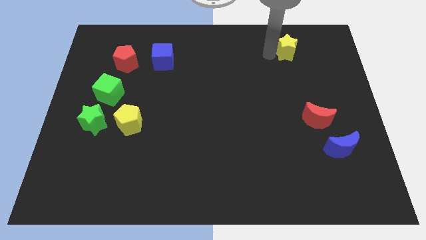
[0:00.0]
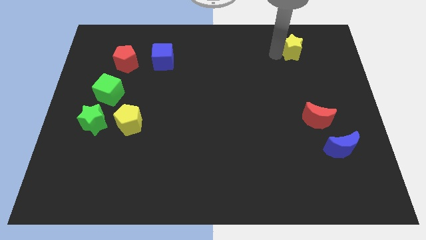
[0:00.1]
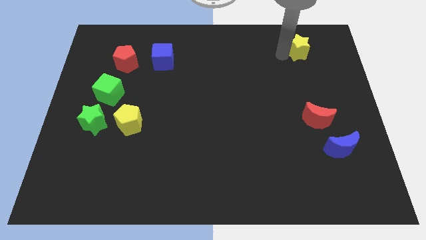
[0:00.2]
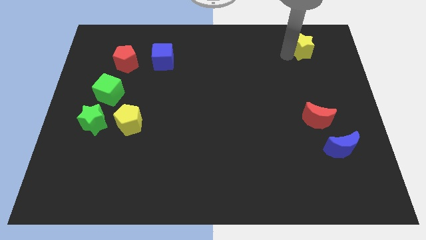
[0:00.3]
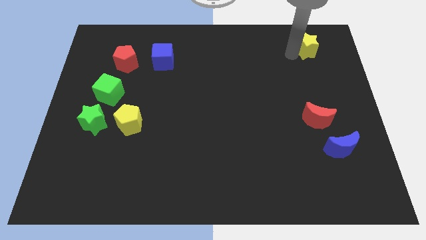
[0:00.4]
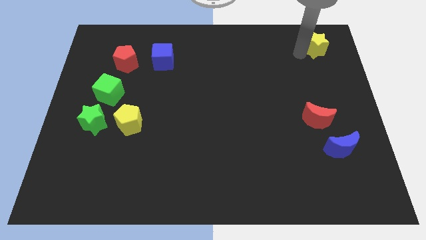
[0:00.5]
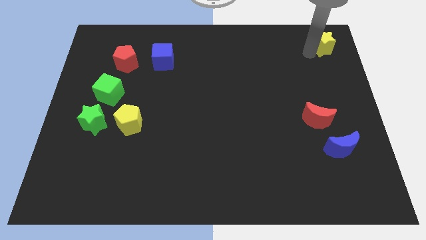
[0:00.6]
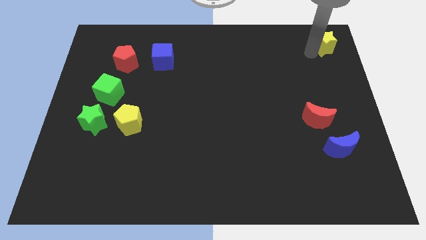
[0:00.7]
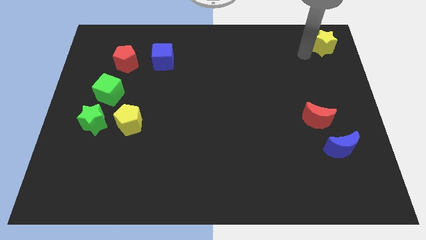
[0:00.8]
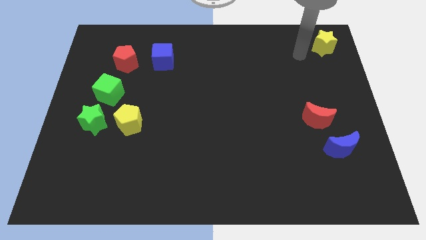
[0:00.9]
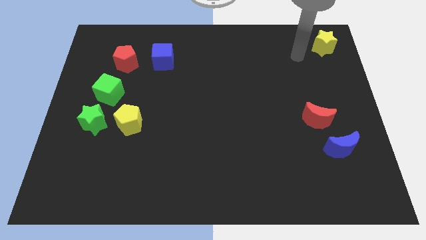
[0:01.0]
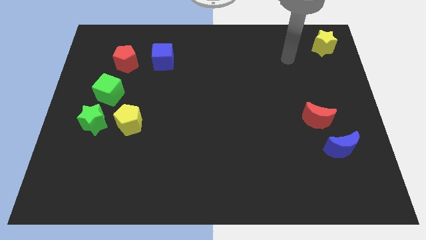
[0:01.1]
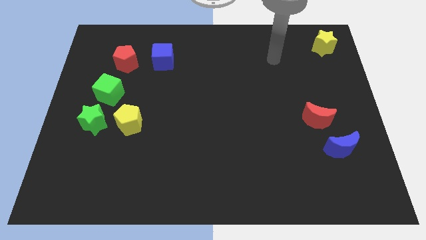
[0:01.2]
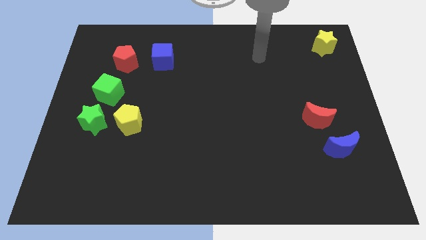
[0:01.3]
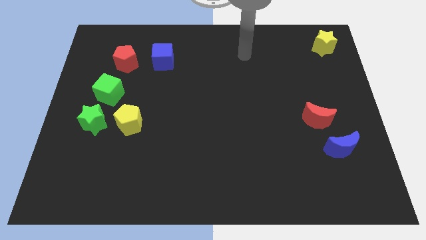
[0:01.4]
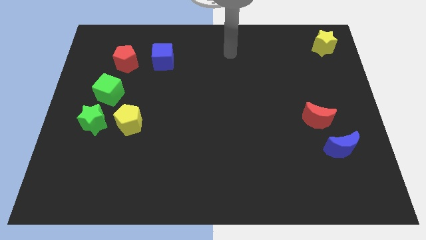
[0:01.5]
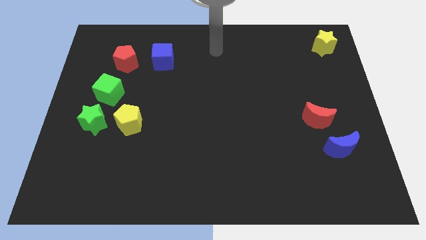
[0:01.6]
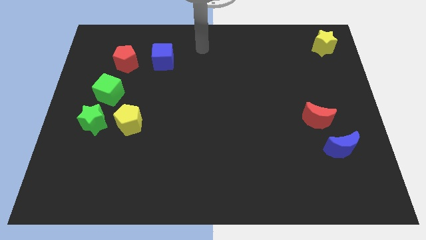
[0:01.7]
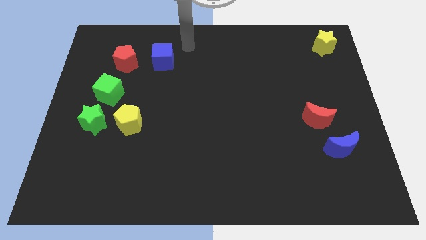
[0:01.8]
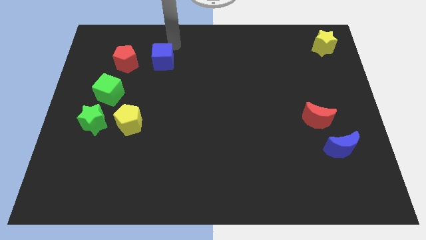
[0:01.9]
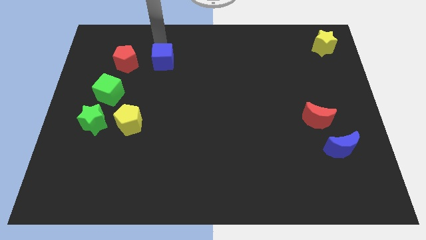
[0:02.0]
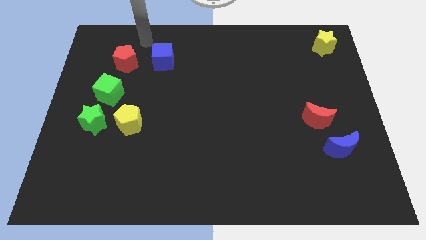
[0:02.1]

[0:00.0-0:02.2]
place the yellow star at the top right side of the board

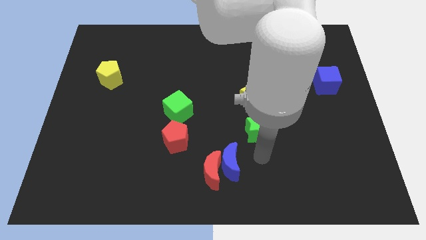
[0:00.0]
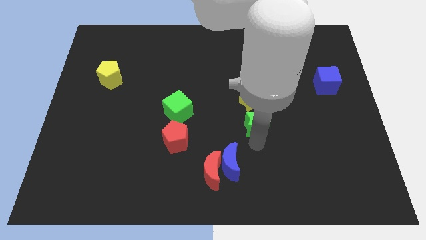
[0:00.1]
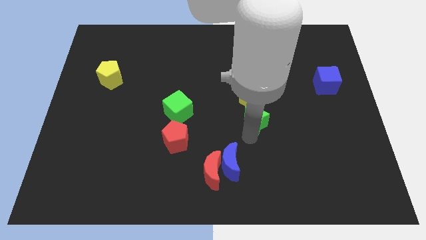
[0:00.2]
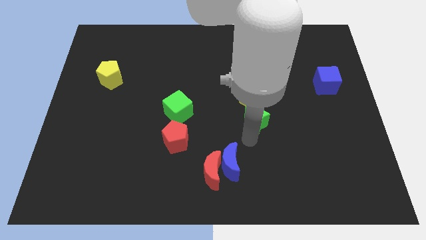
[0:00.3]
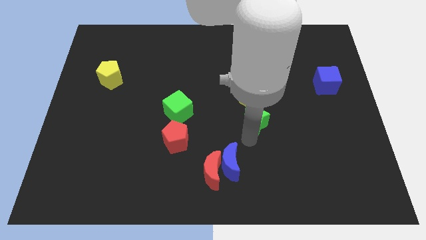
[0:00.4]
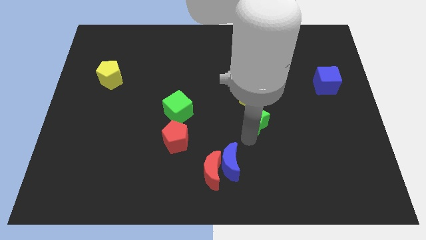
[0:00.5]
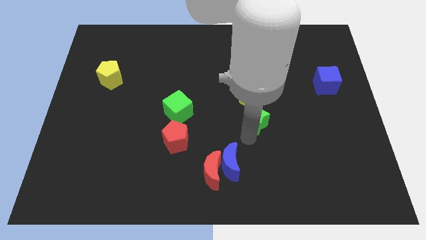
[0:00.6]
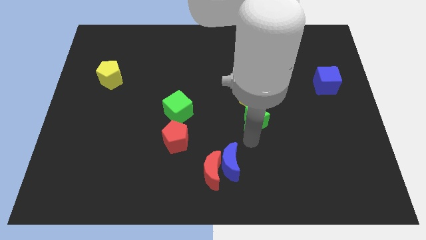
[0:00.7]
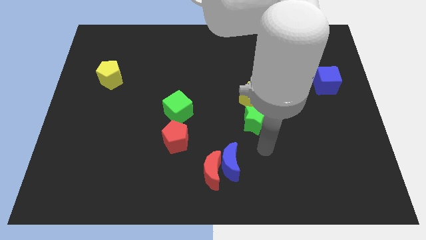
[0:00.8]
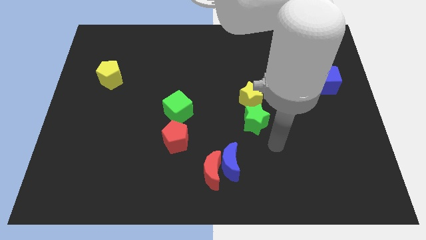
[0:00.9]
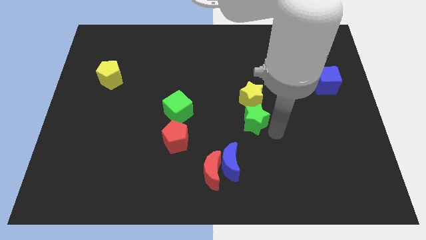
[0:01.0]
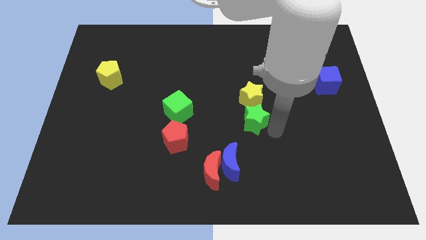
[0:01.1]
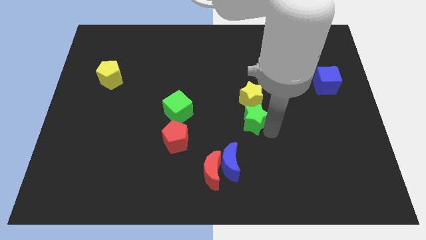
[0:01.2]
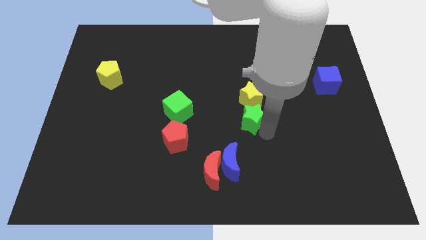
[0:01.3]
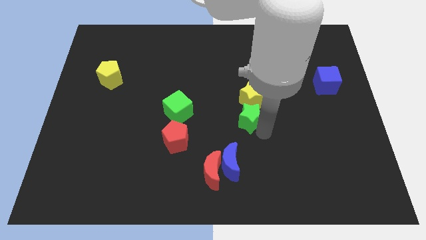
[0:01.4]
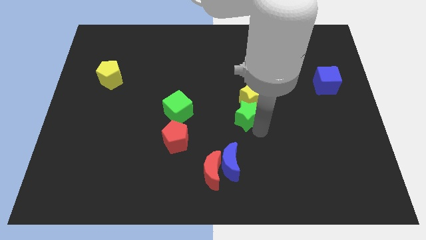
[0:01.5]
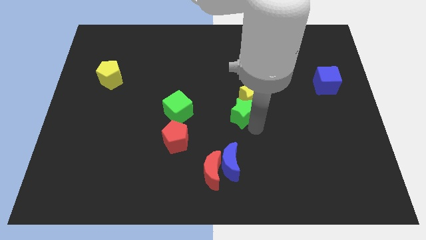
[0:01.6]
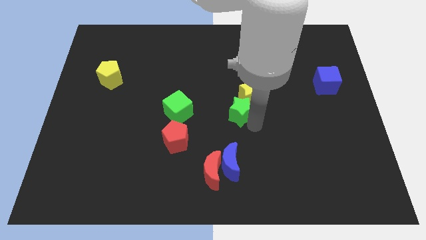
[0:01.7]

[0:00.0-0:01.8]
slide the green star into the bottom side of the yellow star

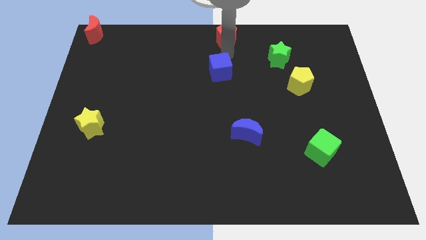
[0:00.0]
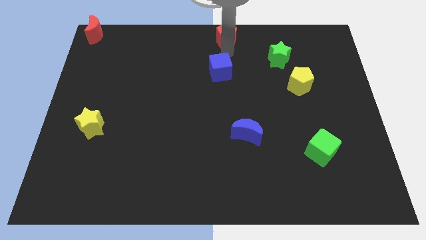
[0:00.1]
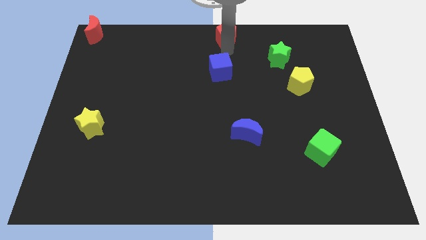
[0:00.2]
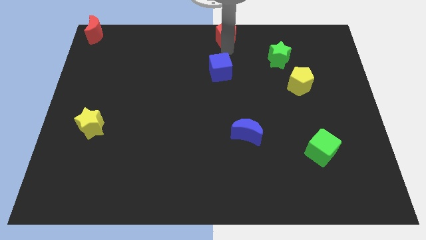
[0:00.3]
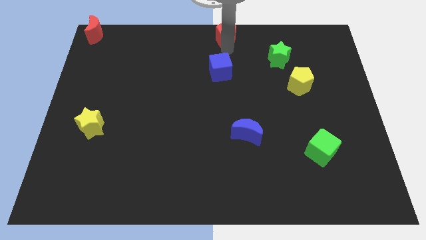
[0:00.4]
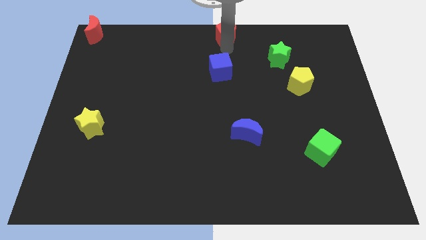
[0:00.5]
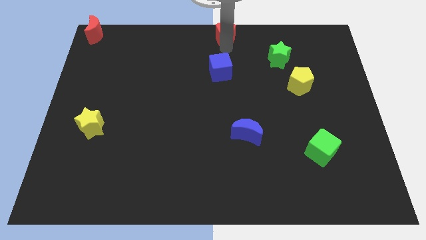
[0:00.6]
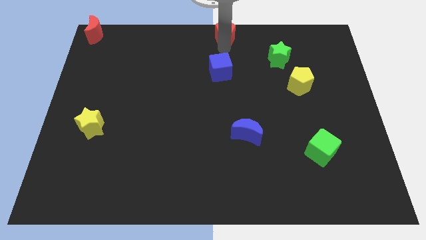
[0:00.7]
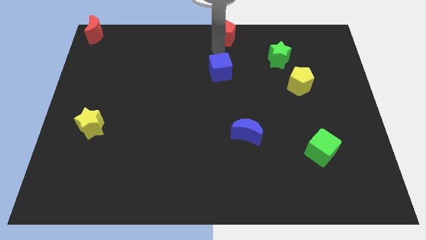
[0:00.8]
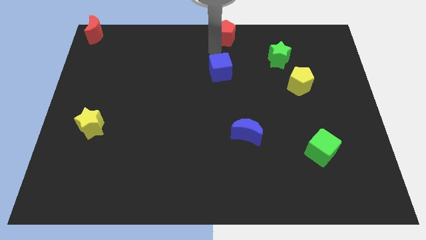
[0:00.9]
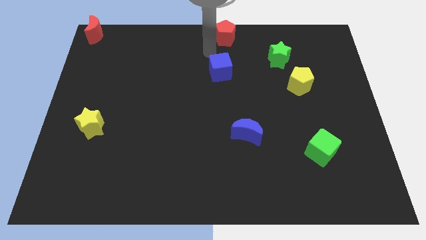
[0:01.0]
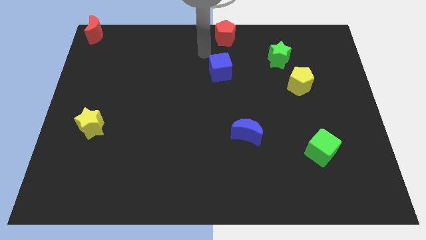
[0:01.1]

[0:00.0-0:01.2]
place red pentagon to the top center

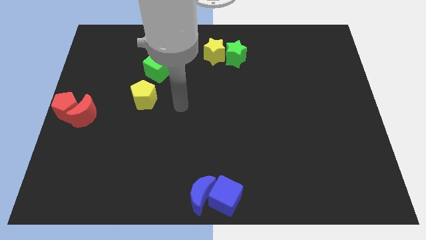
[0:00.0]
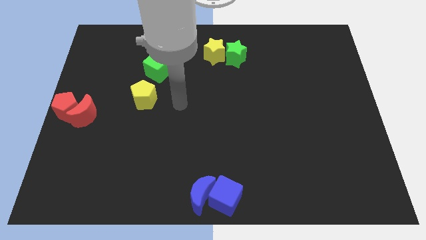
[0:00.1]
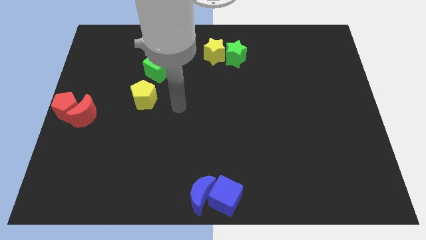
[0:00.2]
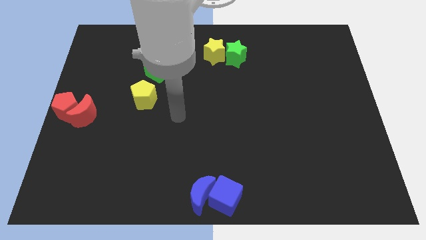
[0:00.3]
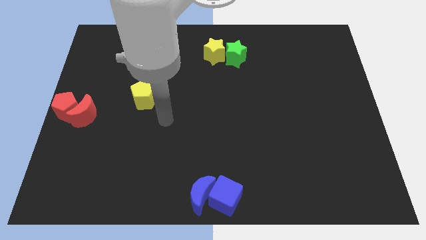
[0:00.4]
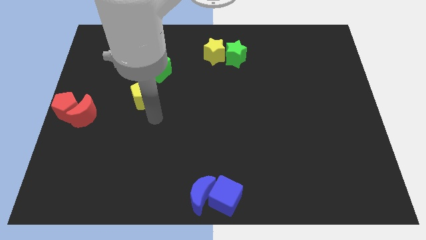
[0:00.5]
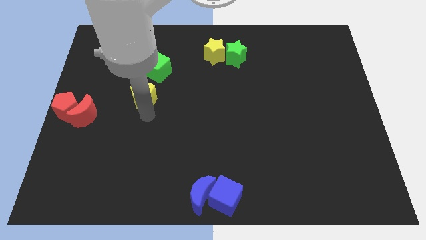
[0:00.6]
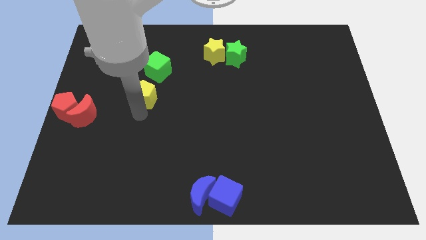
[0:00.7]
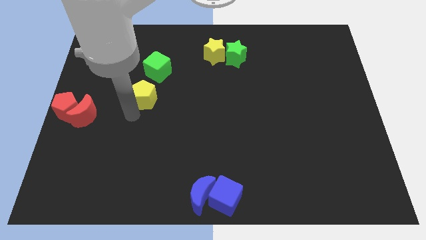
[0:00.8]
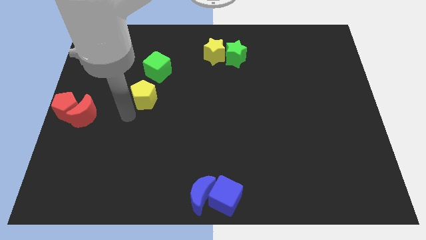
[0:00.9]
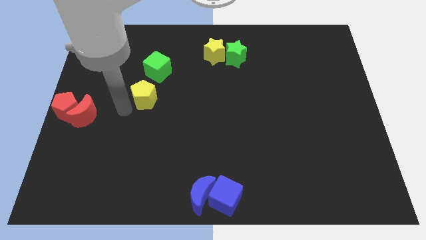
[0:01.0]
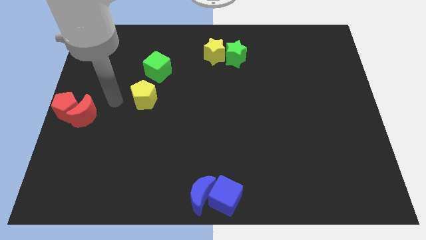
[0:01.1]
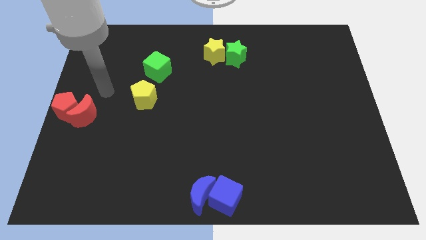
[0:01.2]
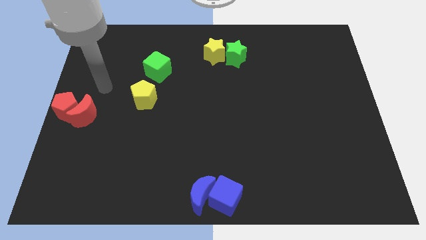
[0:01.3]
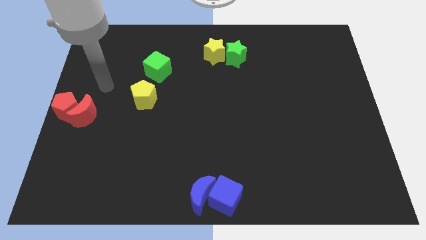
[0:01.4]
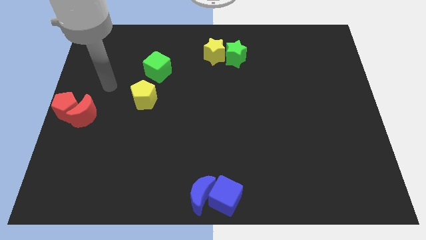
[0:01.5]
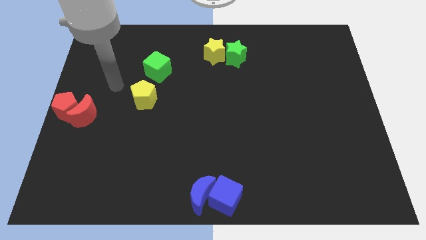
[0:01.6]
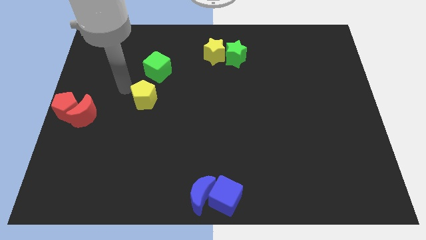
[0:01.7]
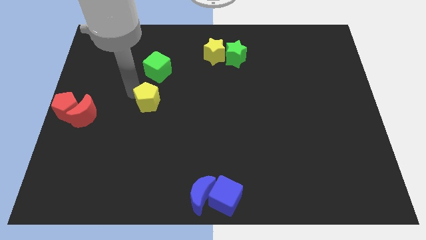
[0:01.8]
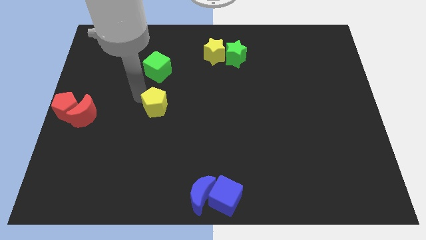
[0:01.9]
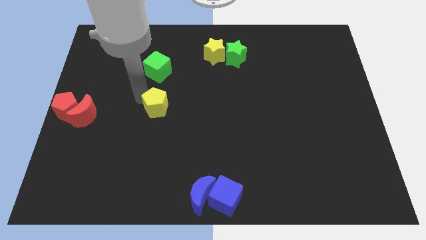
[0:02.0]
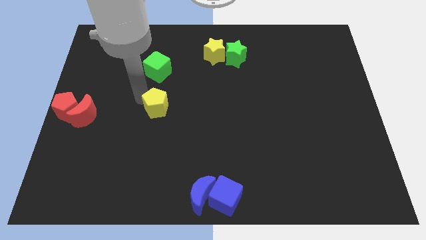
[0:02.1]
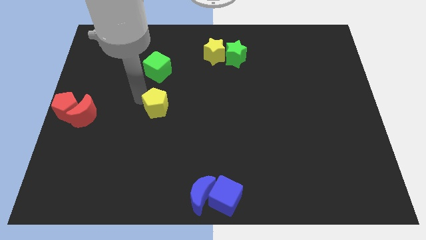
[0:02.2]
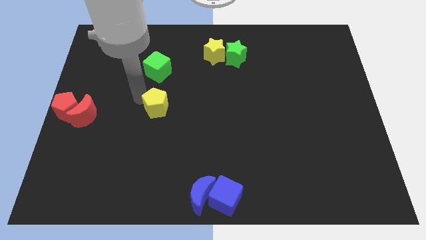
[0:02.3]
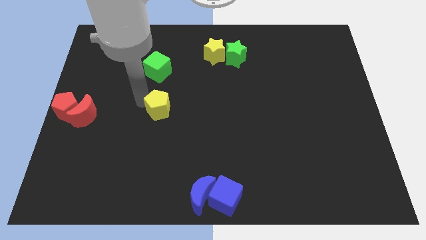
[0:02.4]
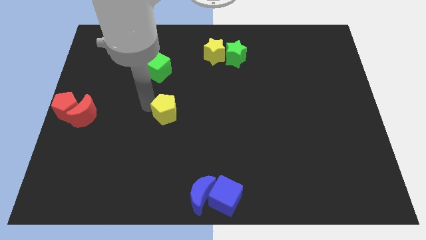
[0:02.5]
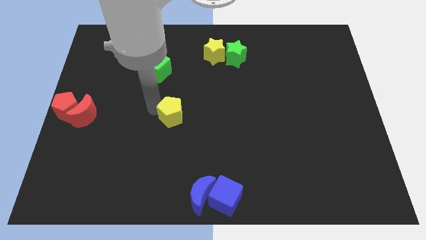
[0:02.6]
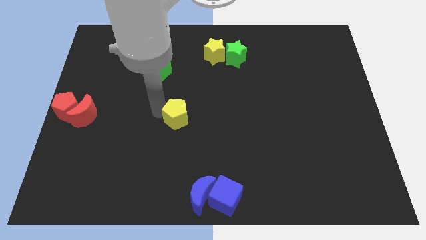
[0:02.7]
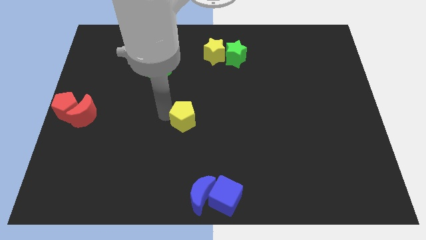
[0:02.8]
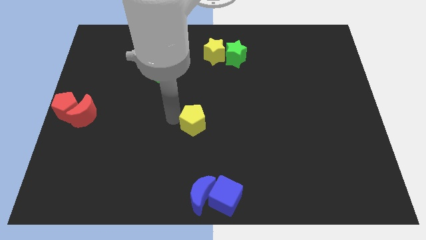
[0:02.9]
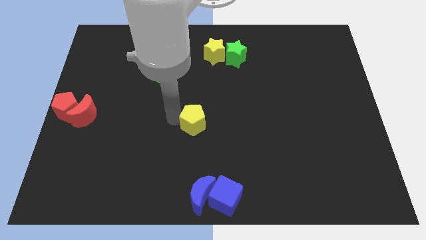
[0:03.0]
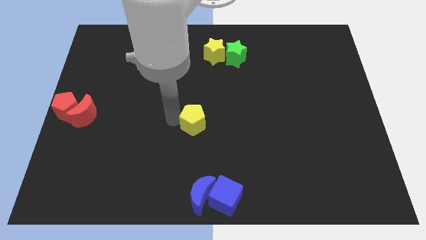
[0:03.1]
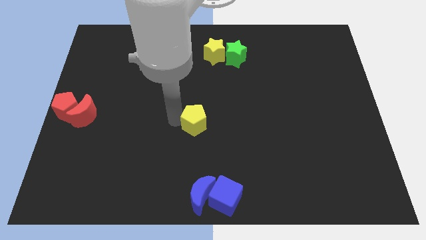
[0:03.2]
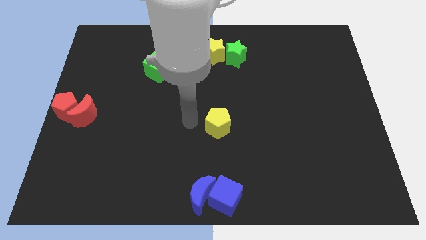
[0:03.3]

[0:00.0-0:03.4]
place yellow pentagon to the bottom of yellow star

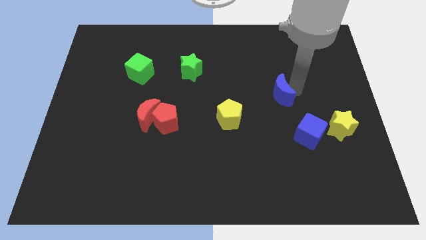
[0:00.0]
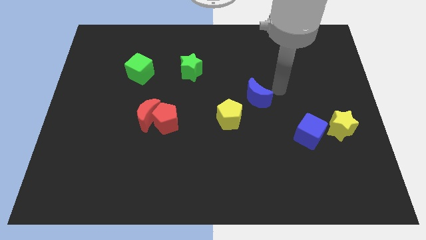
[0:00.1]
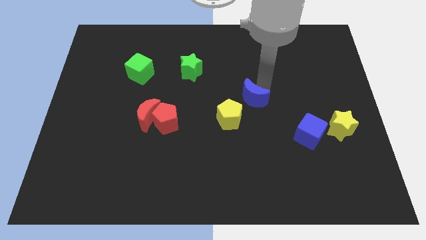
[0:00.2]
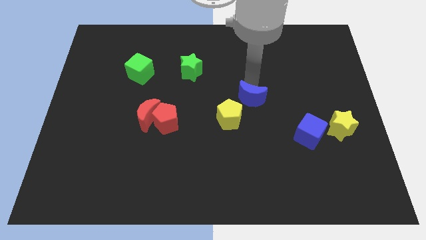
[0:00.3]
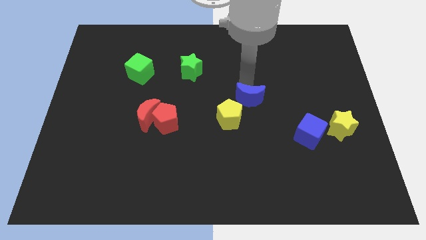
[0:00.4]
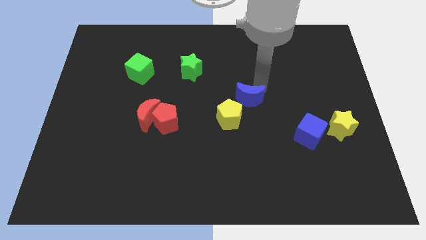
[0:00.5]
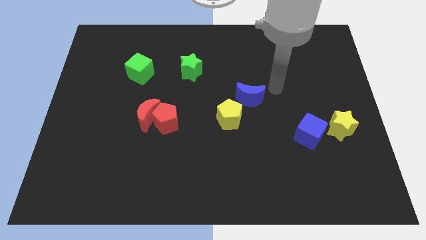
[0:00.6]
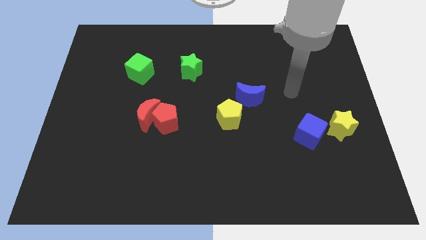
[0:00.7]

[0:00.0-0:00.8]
place the blue moon above the yellow pentagon
